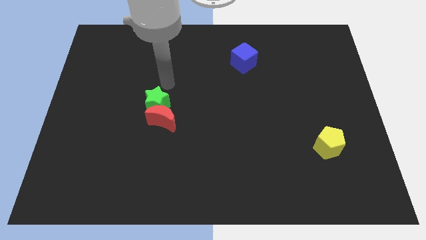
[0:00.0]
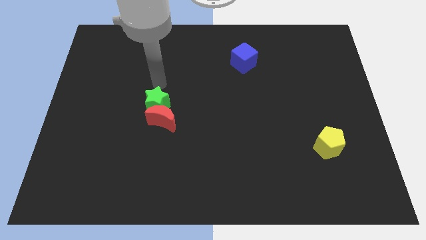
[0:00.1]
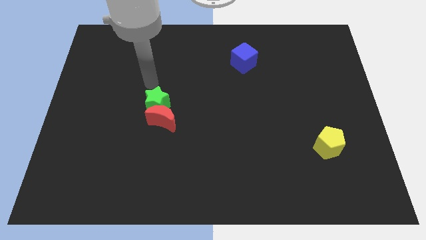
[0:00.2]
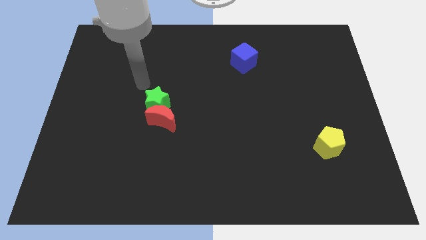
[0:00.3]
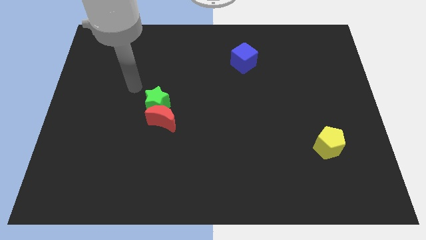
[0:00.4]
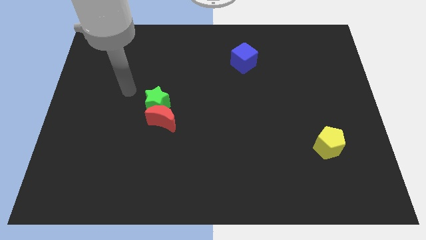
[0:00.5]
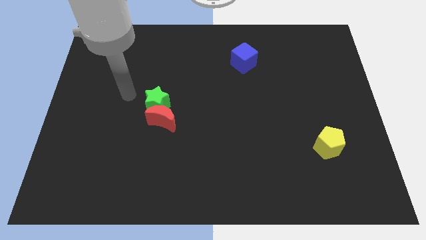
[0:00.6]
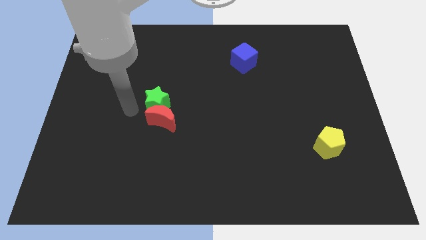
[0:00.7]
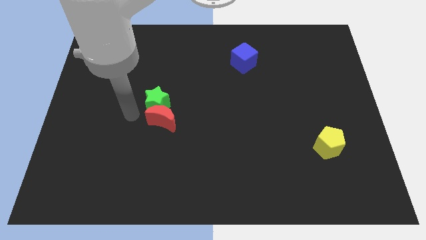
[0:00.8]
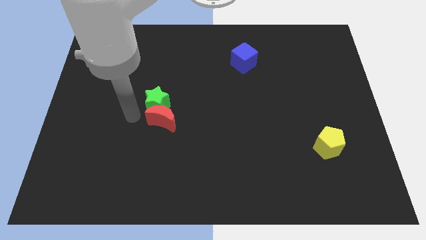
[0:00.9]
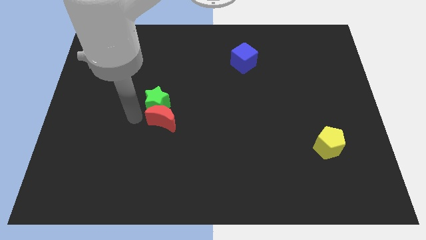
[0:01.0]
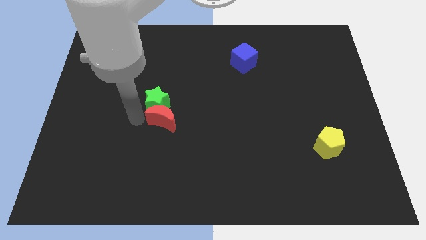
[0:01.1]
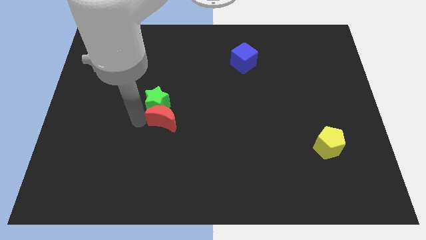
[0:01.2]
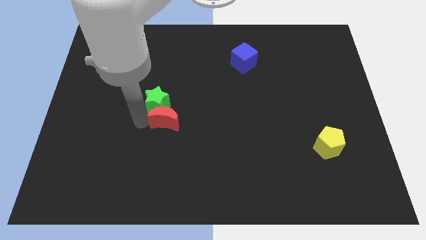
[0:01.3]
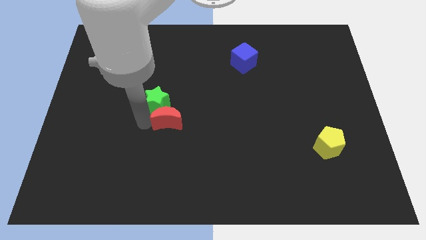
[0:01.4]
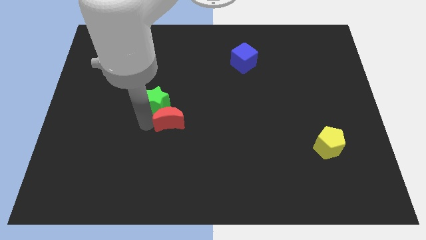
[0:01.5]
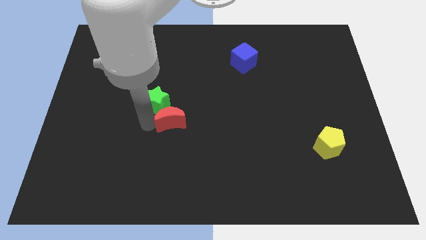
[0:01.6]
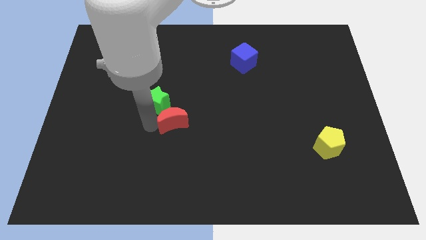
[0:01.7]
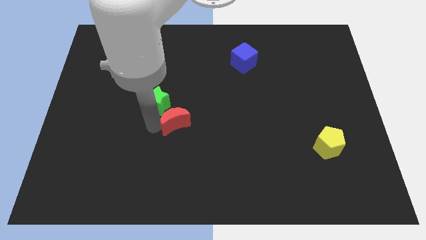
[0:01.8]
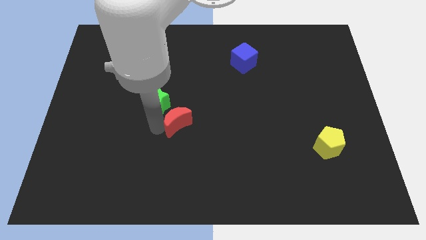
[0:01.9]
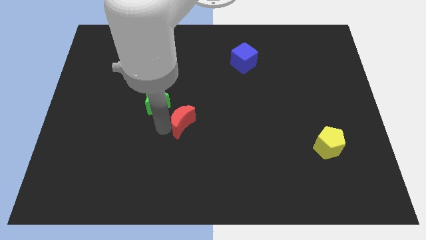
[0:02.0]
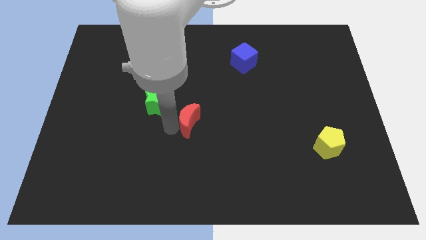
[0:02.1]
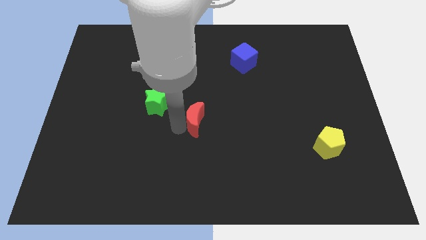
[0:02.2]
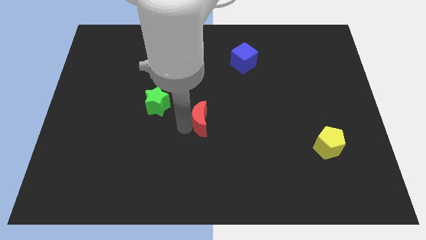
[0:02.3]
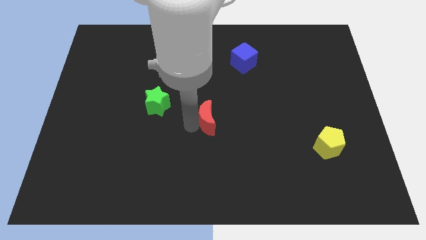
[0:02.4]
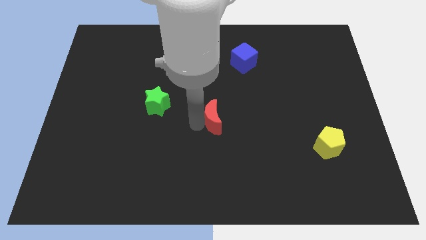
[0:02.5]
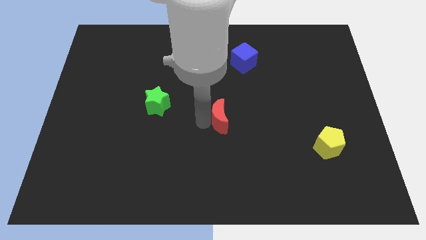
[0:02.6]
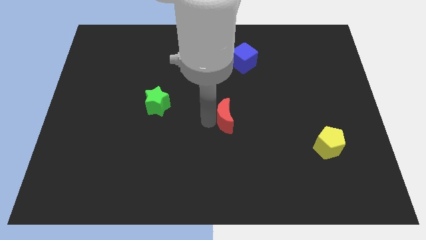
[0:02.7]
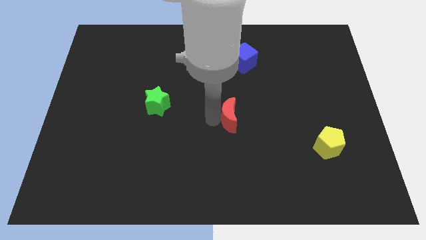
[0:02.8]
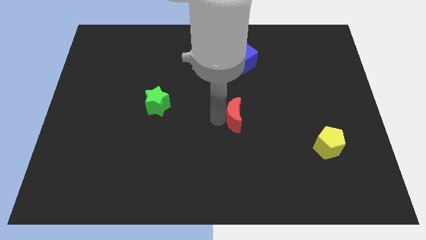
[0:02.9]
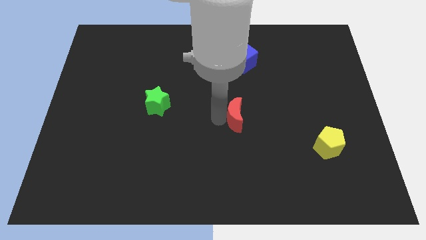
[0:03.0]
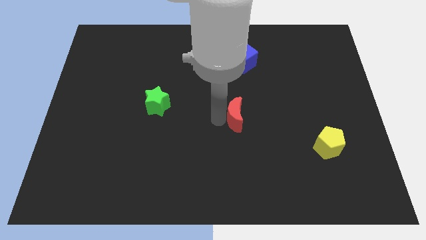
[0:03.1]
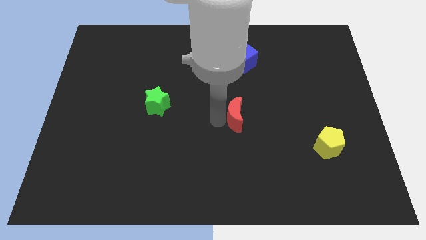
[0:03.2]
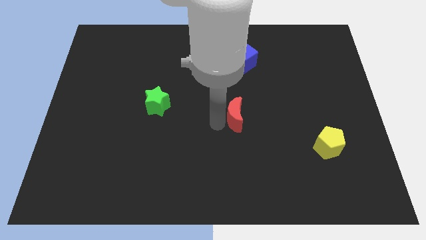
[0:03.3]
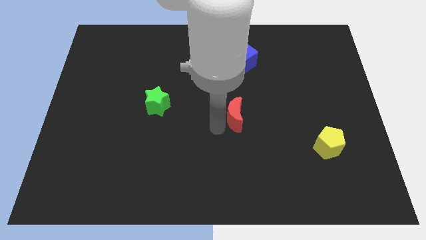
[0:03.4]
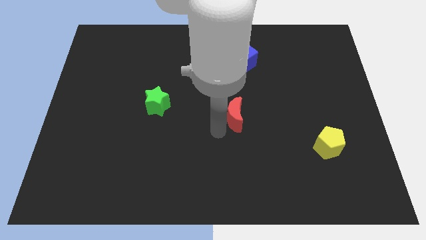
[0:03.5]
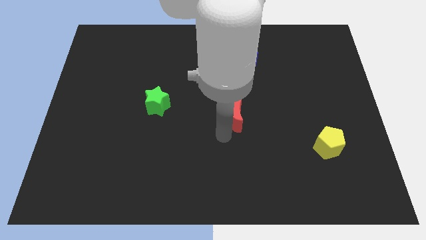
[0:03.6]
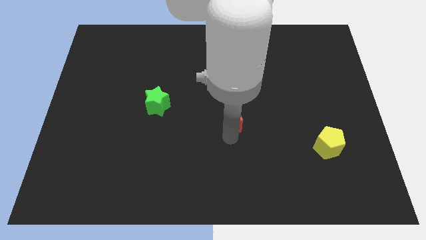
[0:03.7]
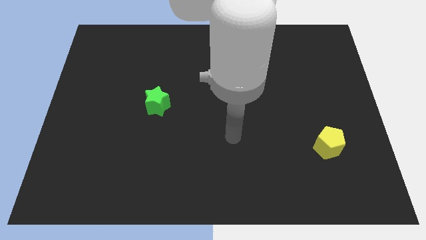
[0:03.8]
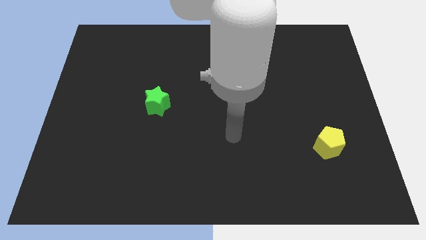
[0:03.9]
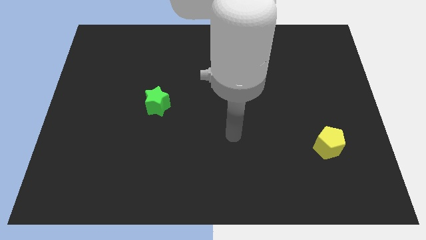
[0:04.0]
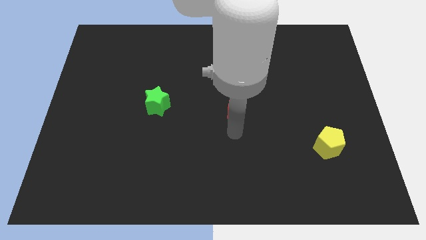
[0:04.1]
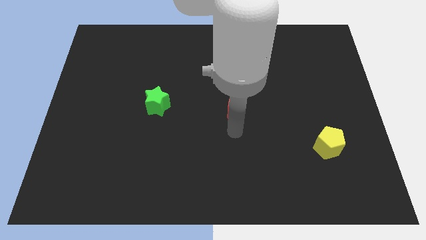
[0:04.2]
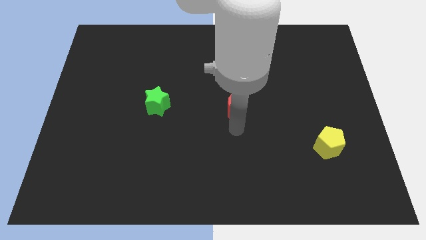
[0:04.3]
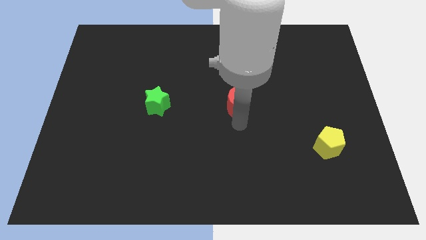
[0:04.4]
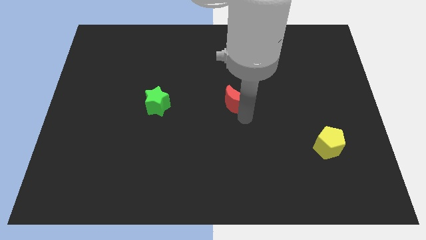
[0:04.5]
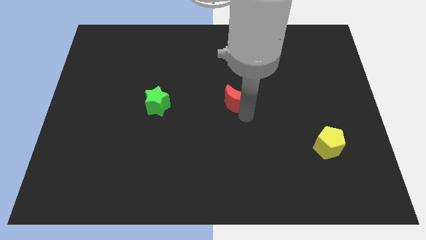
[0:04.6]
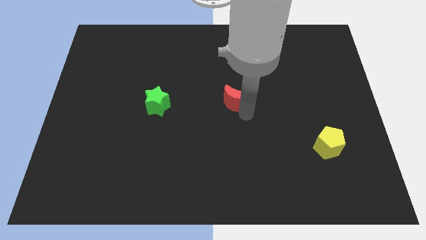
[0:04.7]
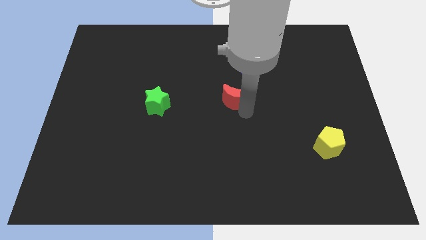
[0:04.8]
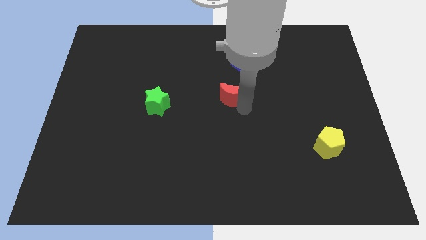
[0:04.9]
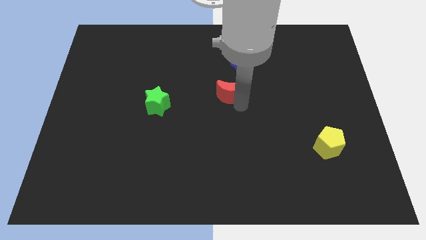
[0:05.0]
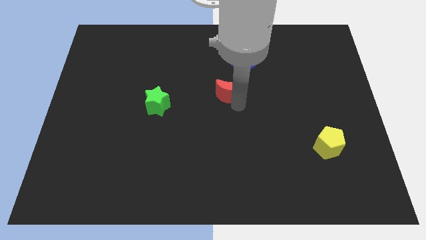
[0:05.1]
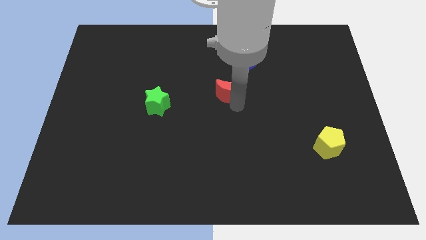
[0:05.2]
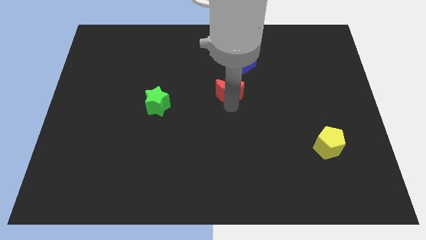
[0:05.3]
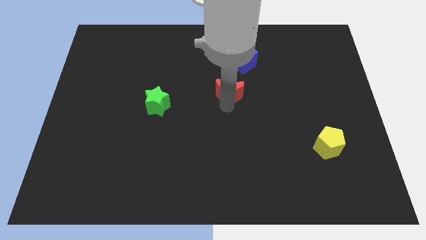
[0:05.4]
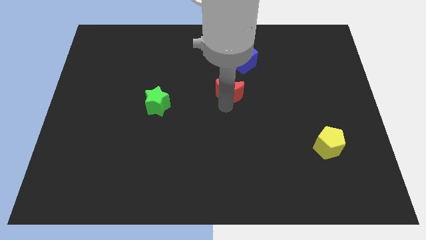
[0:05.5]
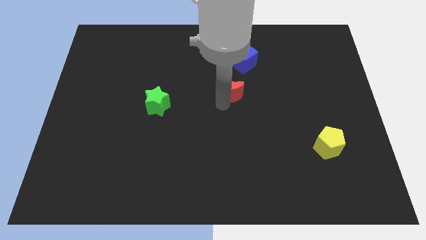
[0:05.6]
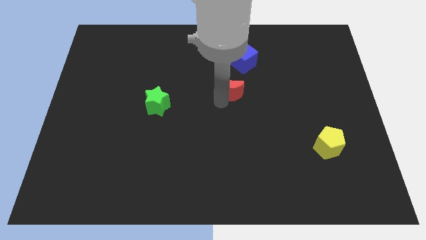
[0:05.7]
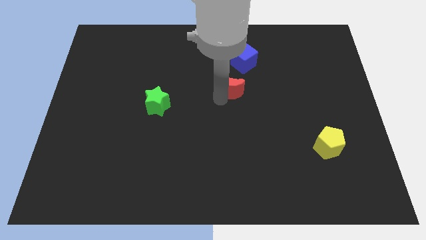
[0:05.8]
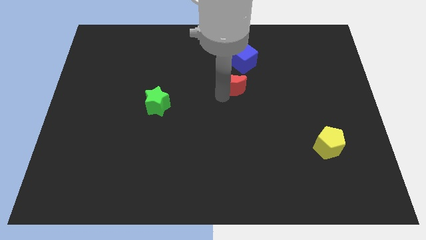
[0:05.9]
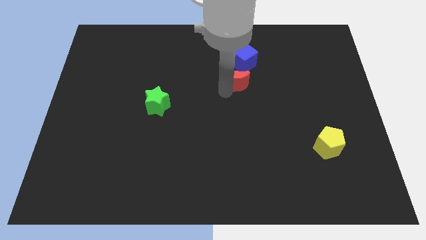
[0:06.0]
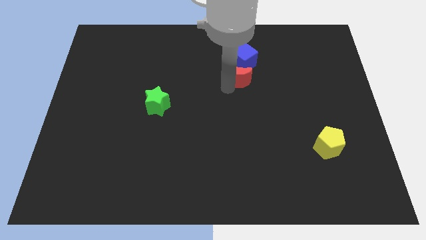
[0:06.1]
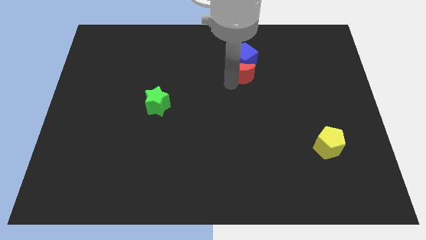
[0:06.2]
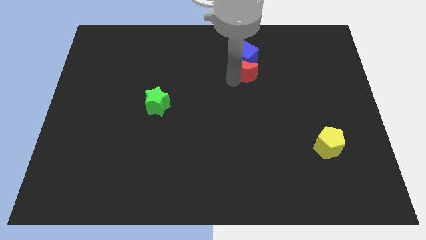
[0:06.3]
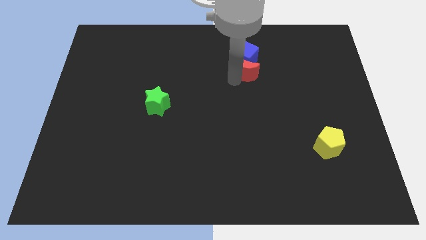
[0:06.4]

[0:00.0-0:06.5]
put the red block next to the blue block

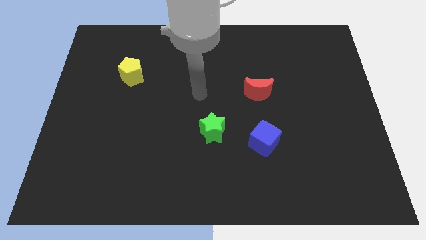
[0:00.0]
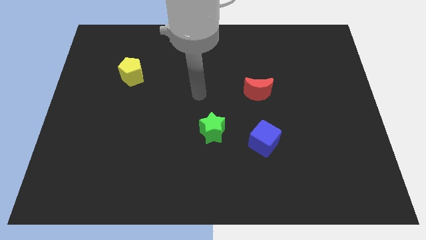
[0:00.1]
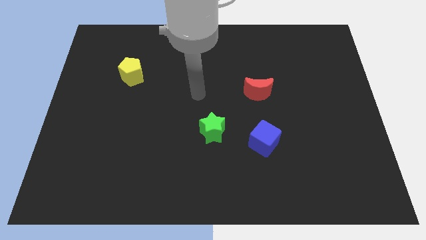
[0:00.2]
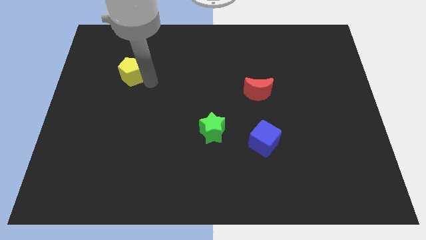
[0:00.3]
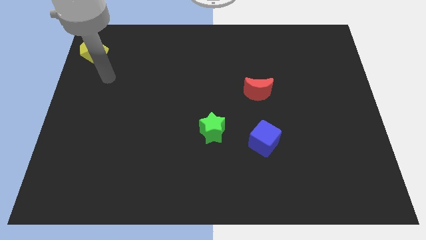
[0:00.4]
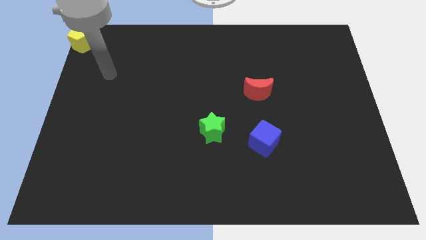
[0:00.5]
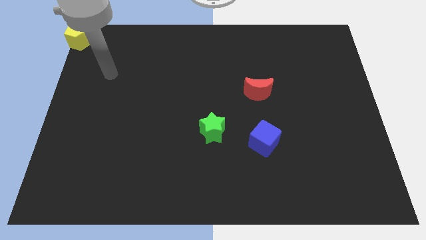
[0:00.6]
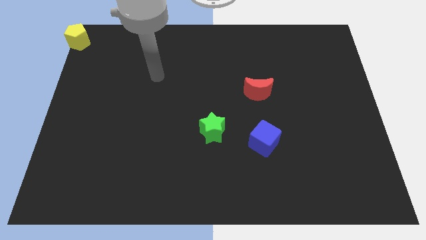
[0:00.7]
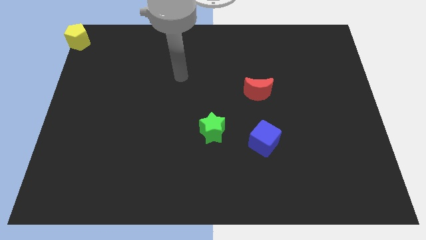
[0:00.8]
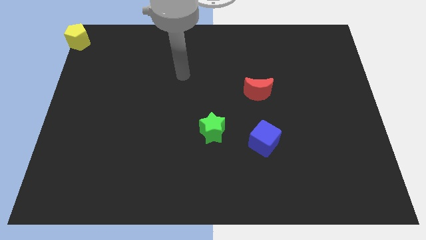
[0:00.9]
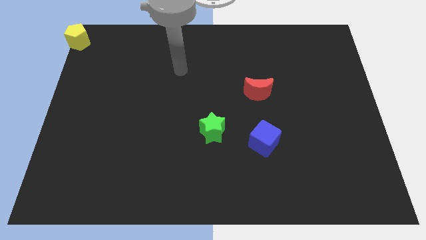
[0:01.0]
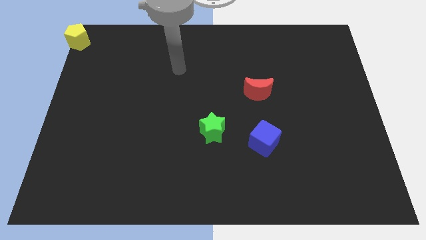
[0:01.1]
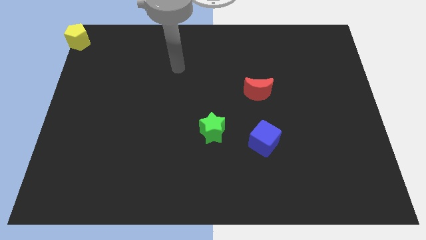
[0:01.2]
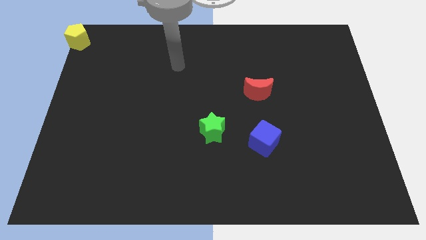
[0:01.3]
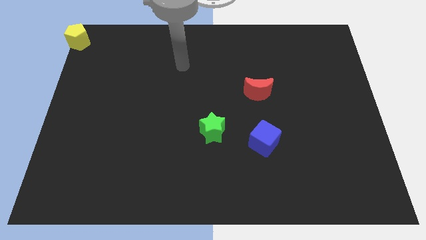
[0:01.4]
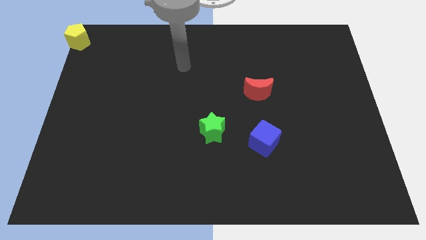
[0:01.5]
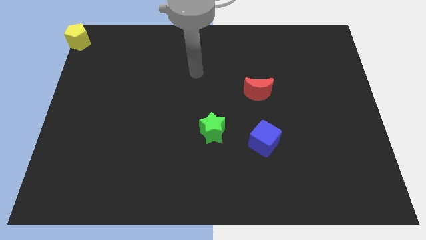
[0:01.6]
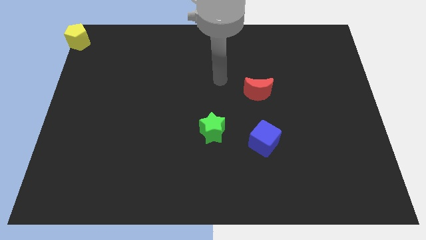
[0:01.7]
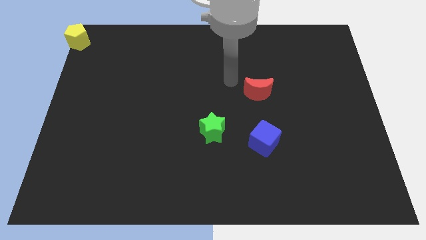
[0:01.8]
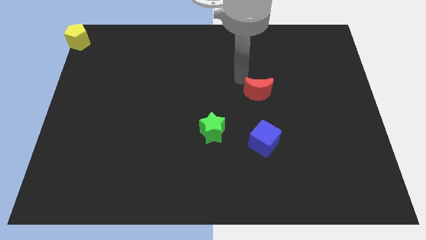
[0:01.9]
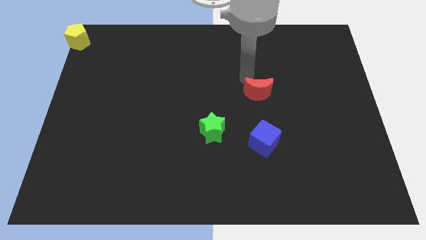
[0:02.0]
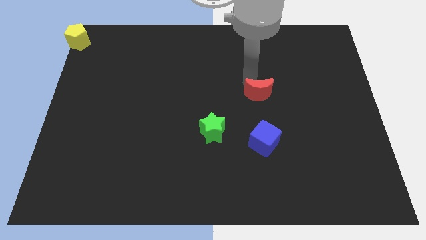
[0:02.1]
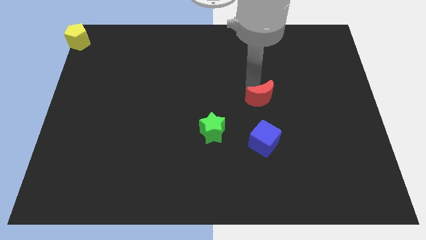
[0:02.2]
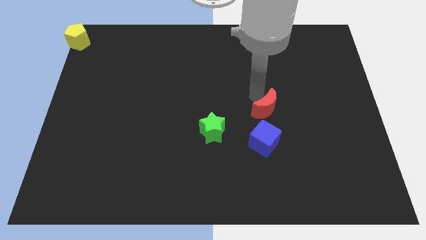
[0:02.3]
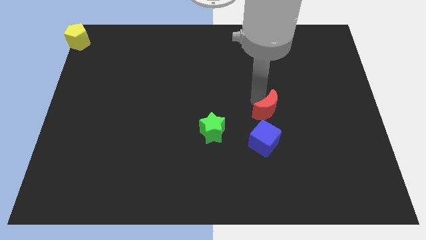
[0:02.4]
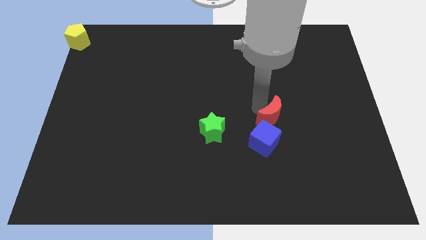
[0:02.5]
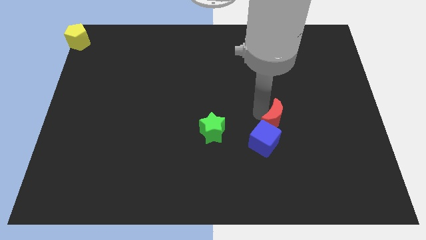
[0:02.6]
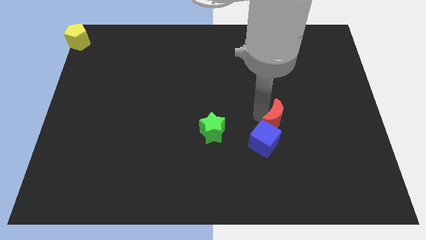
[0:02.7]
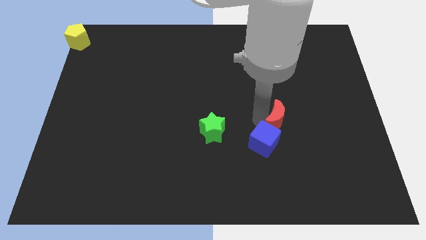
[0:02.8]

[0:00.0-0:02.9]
move the red block to the blue cube
